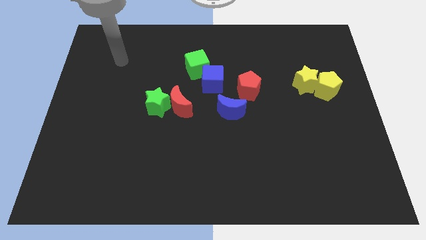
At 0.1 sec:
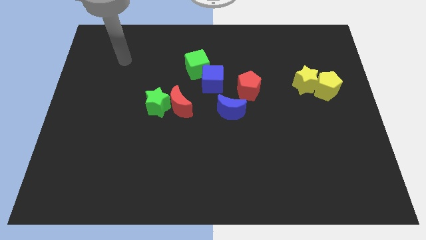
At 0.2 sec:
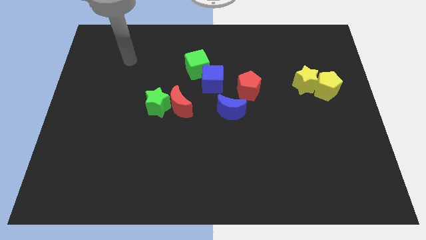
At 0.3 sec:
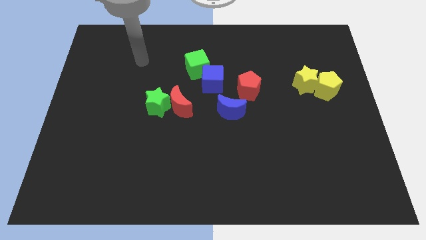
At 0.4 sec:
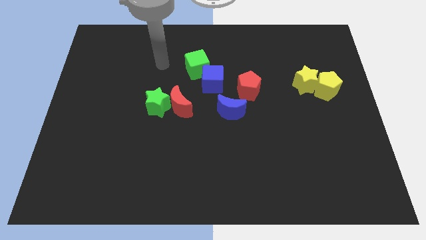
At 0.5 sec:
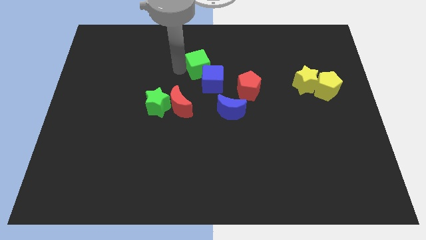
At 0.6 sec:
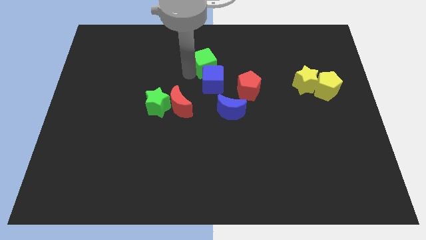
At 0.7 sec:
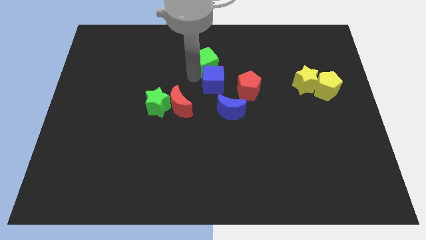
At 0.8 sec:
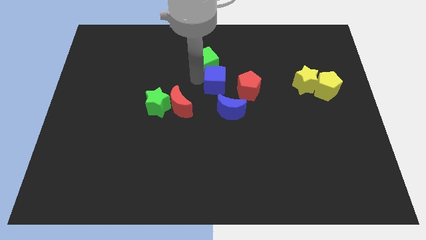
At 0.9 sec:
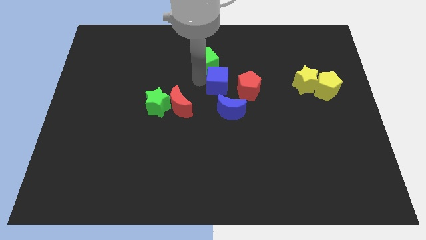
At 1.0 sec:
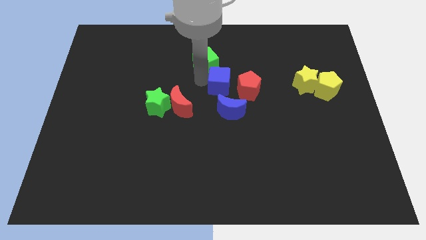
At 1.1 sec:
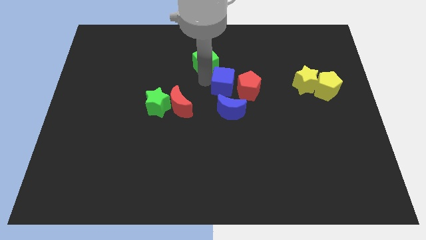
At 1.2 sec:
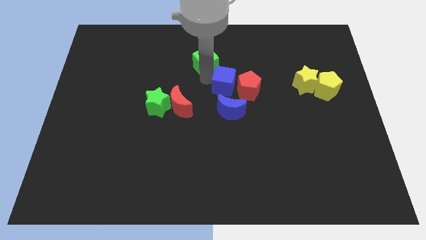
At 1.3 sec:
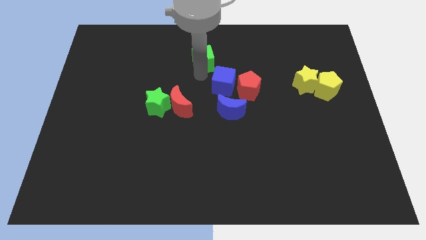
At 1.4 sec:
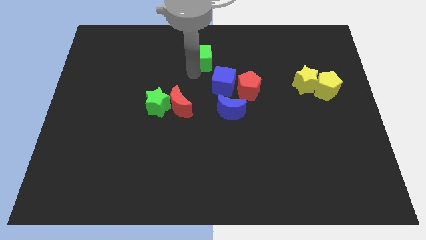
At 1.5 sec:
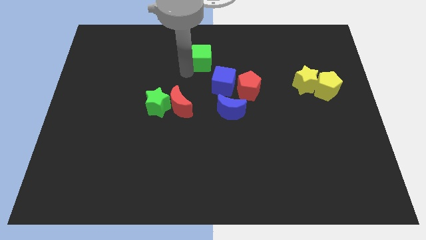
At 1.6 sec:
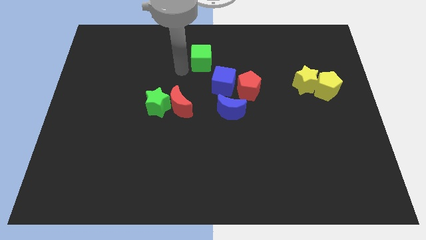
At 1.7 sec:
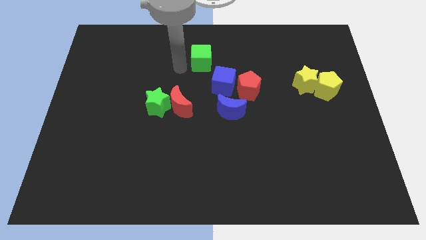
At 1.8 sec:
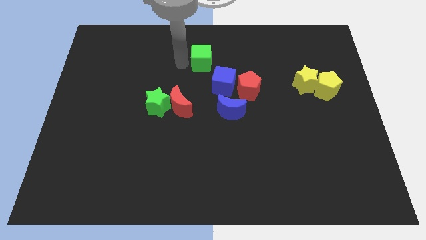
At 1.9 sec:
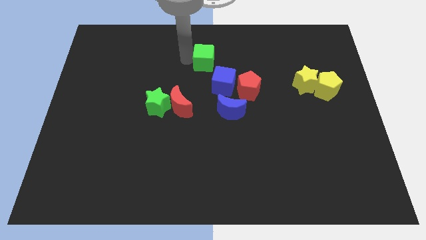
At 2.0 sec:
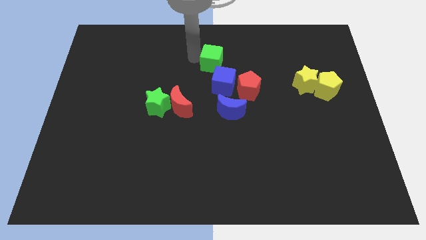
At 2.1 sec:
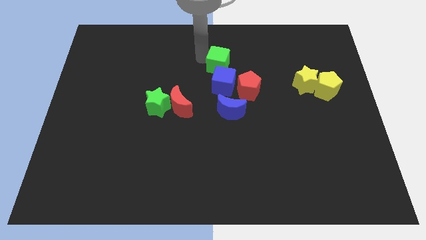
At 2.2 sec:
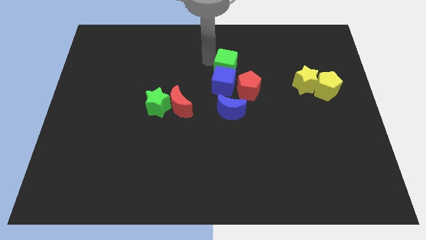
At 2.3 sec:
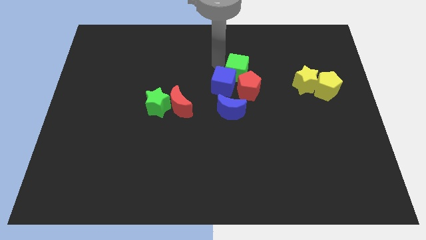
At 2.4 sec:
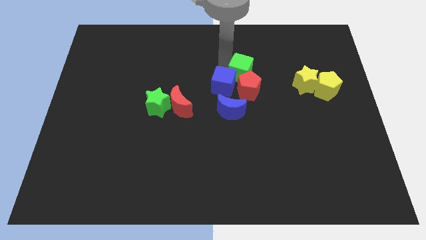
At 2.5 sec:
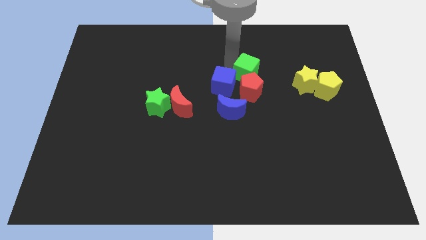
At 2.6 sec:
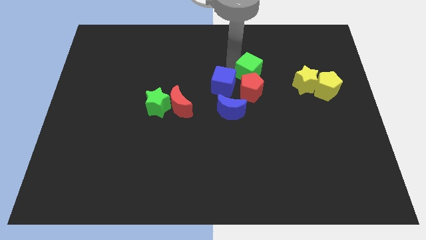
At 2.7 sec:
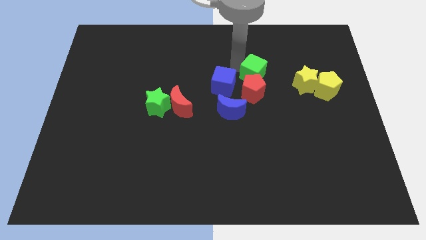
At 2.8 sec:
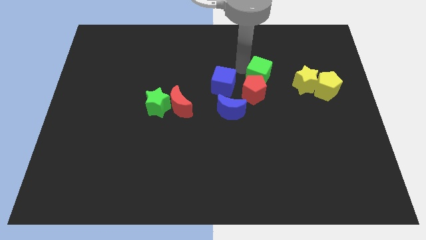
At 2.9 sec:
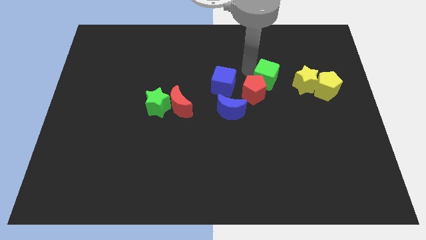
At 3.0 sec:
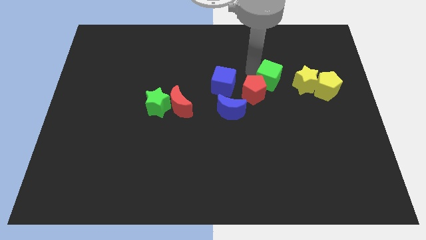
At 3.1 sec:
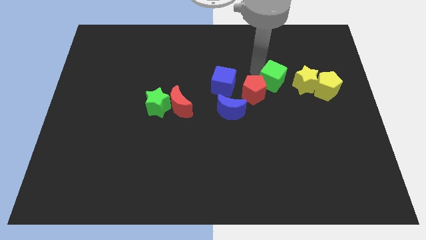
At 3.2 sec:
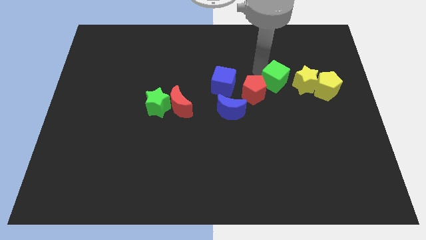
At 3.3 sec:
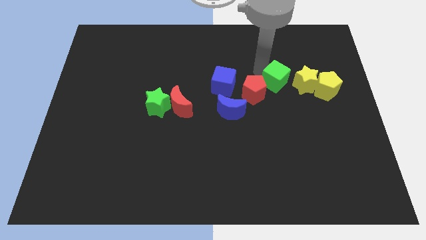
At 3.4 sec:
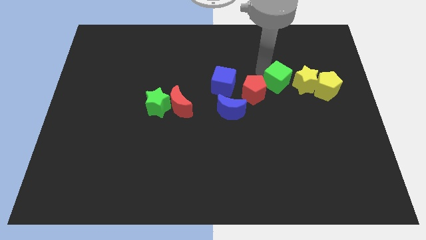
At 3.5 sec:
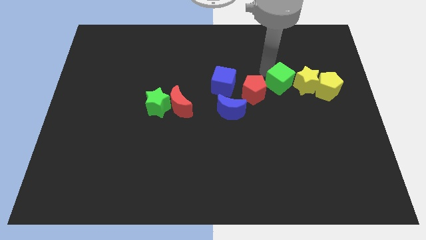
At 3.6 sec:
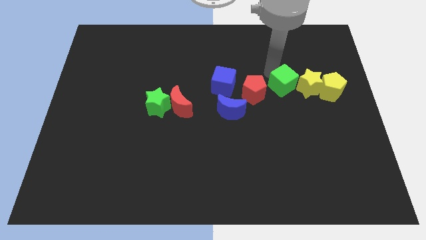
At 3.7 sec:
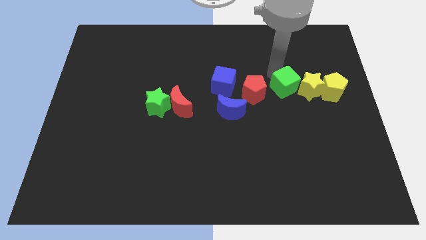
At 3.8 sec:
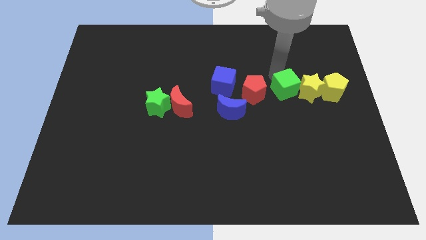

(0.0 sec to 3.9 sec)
move the green cube to the yellow star

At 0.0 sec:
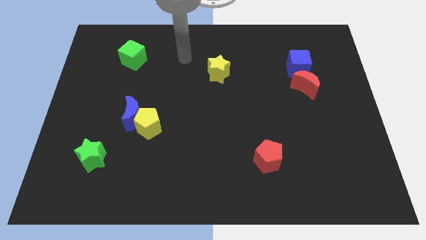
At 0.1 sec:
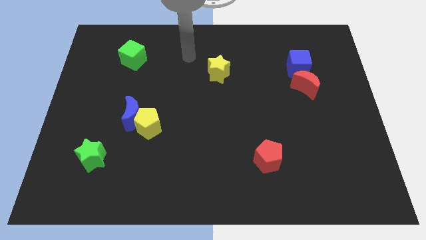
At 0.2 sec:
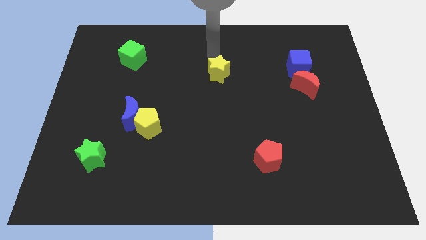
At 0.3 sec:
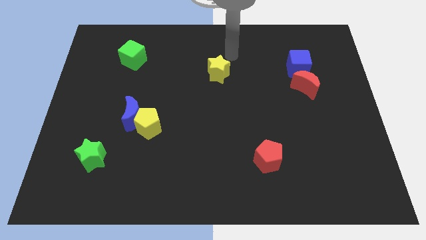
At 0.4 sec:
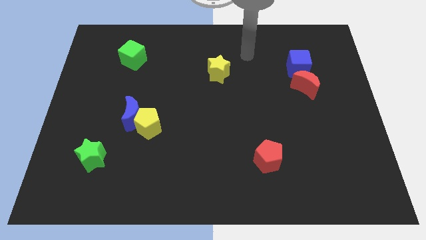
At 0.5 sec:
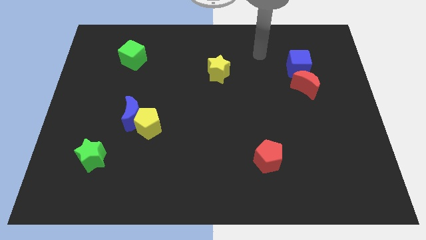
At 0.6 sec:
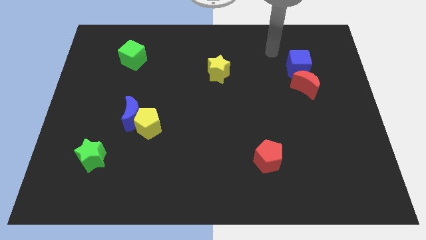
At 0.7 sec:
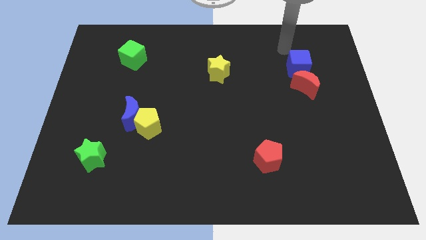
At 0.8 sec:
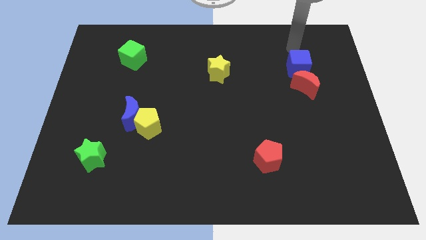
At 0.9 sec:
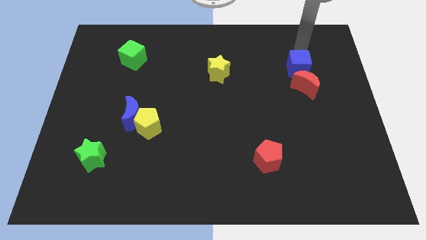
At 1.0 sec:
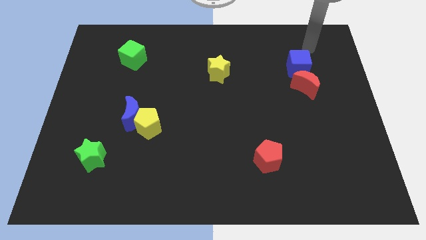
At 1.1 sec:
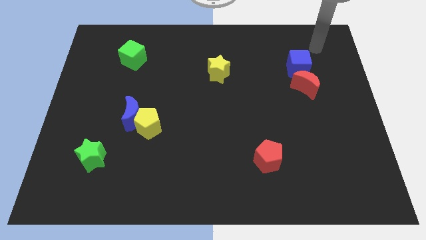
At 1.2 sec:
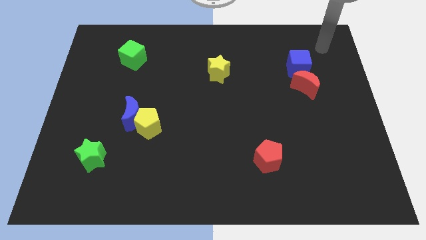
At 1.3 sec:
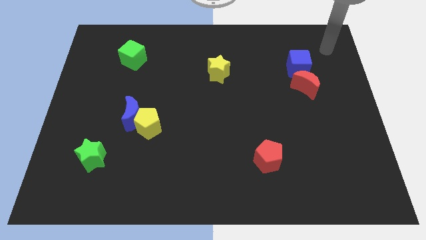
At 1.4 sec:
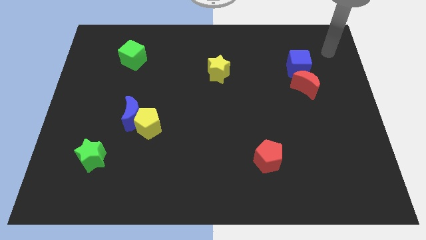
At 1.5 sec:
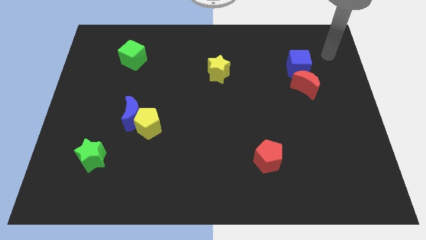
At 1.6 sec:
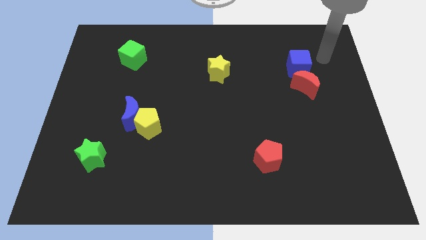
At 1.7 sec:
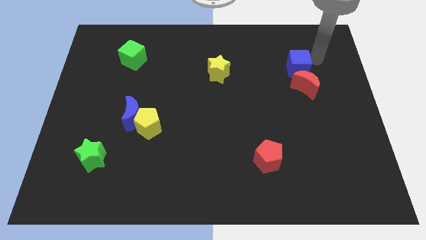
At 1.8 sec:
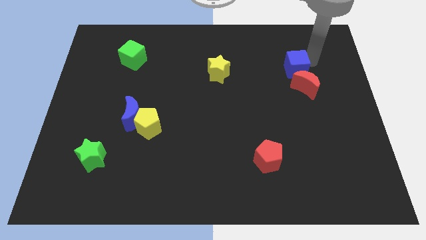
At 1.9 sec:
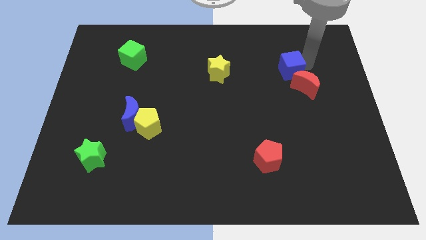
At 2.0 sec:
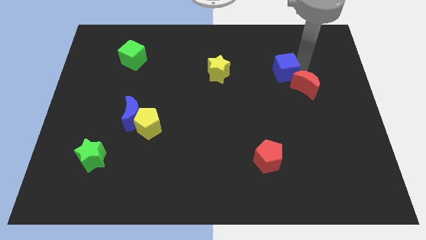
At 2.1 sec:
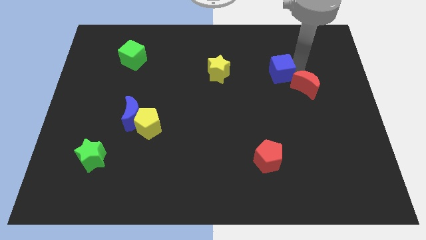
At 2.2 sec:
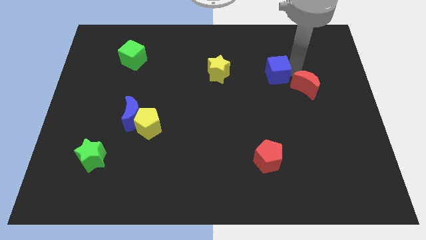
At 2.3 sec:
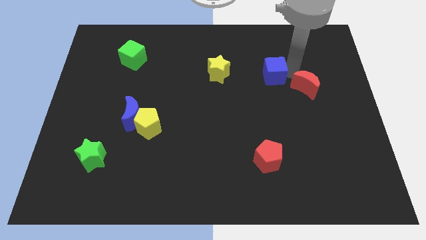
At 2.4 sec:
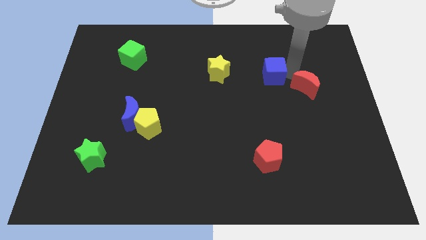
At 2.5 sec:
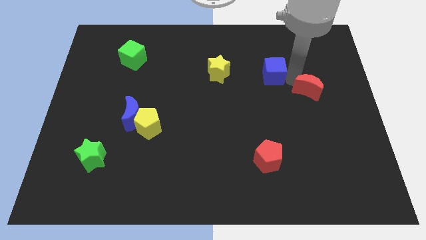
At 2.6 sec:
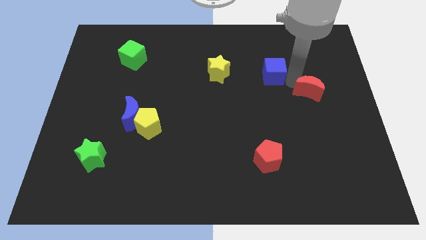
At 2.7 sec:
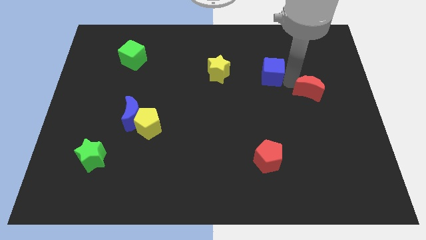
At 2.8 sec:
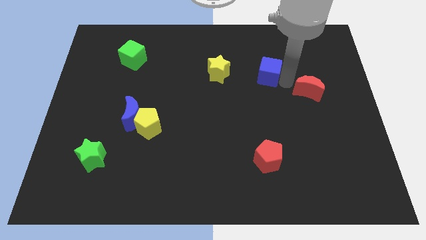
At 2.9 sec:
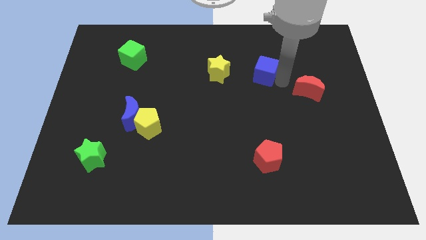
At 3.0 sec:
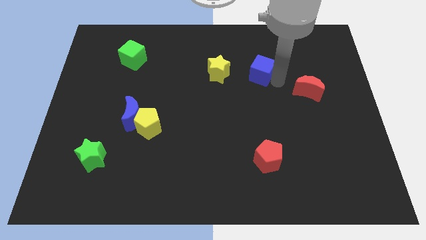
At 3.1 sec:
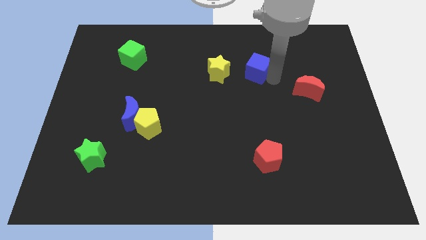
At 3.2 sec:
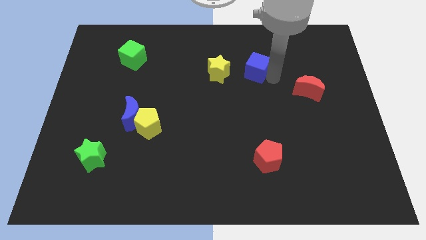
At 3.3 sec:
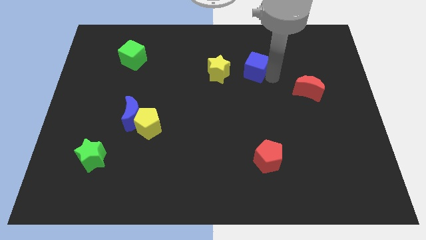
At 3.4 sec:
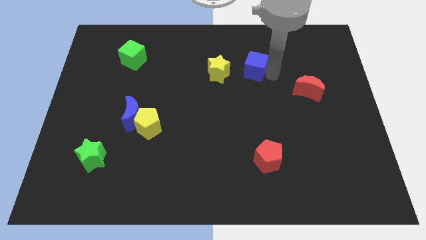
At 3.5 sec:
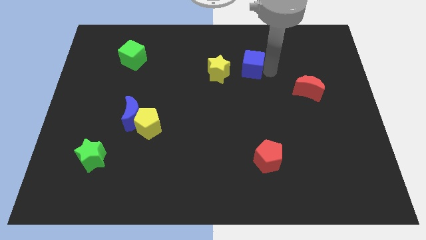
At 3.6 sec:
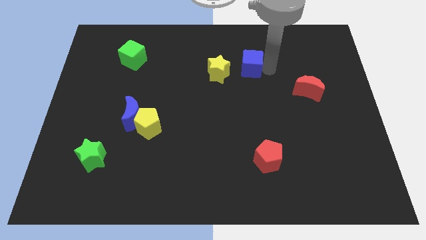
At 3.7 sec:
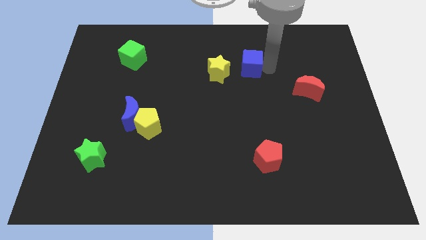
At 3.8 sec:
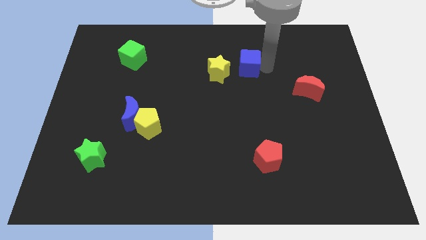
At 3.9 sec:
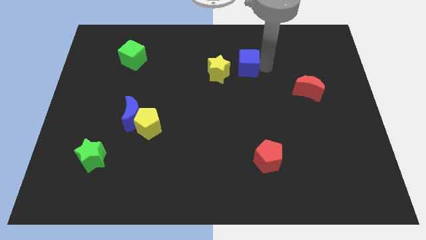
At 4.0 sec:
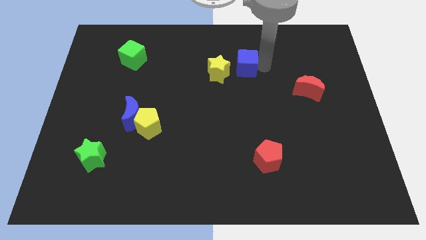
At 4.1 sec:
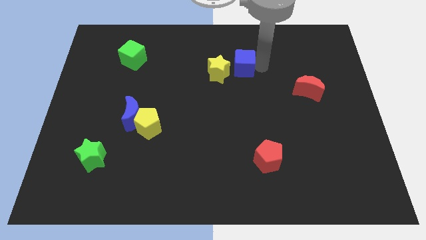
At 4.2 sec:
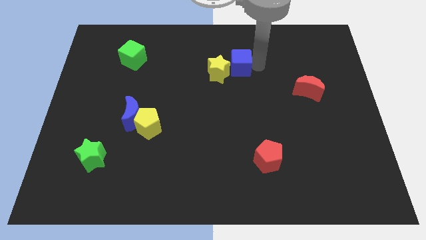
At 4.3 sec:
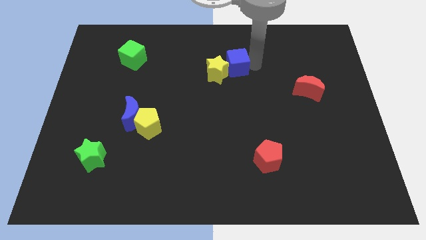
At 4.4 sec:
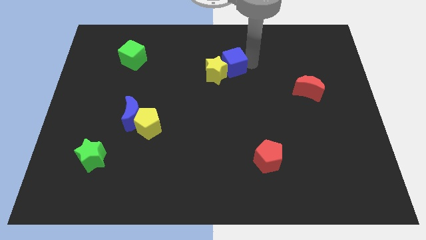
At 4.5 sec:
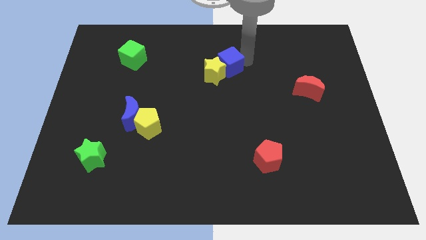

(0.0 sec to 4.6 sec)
move the blue cube to the yellow star
